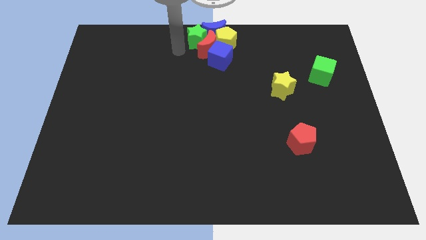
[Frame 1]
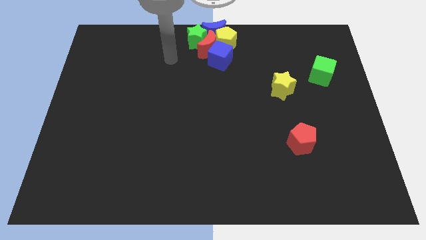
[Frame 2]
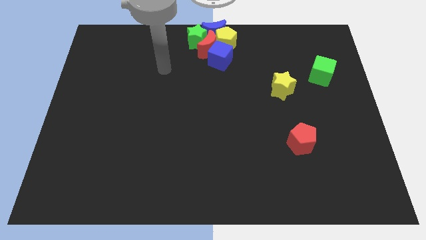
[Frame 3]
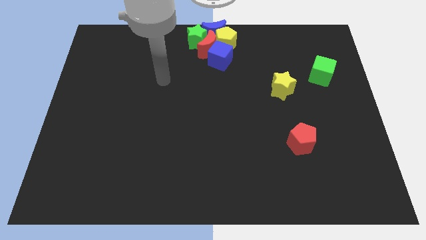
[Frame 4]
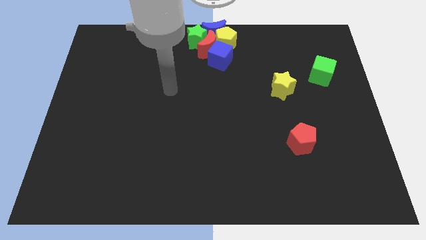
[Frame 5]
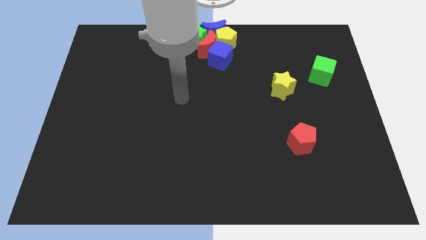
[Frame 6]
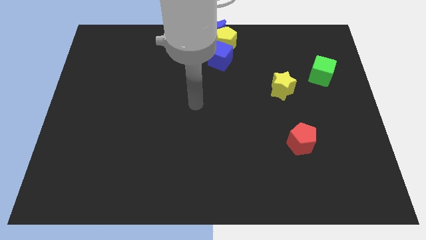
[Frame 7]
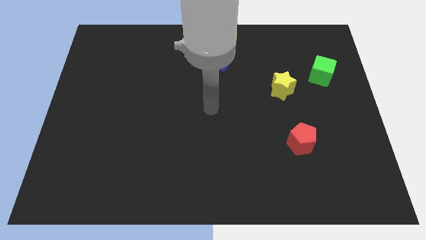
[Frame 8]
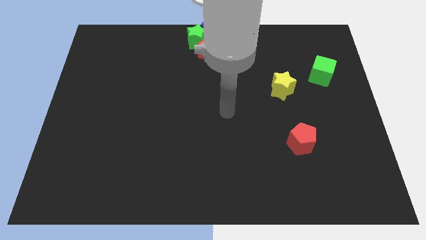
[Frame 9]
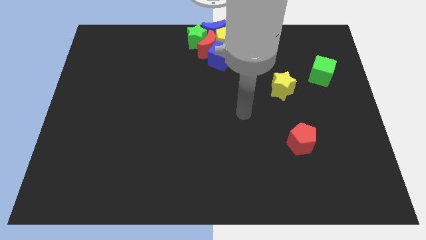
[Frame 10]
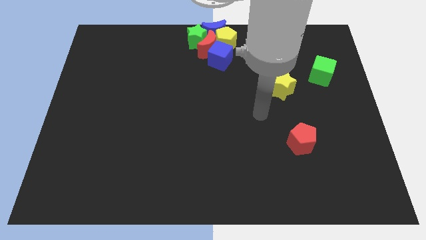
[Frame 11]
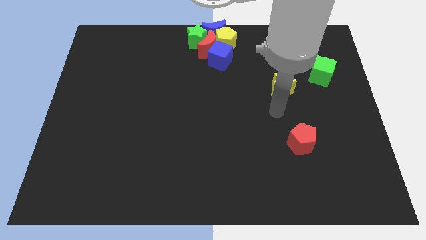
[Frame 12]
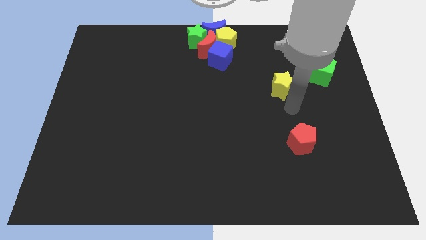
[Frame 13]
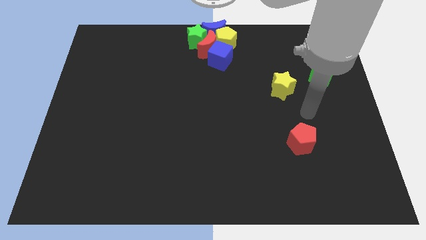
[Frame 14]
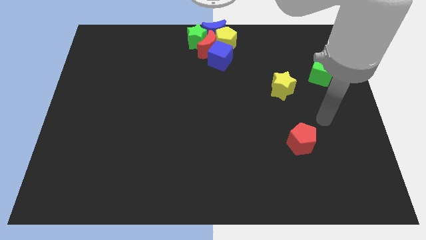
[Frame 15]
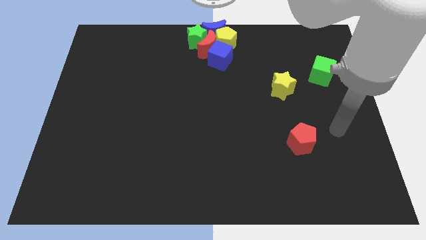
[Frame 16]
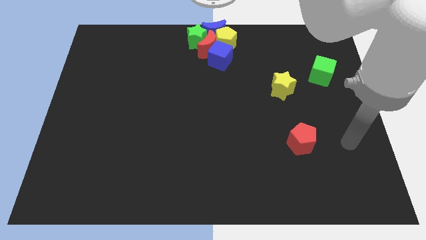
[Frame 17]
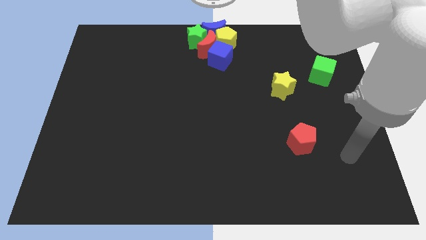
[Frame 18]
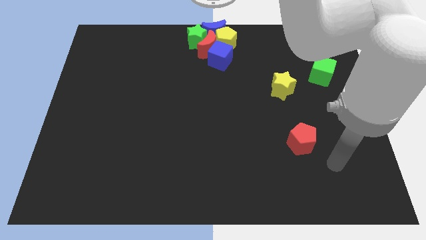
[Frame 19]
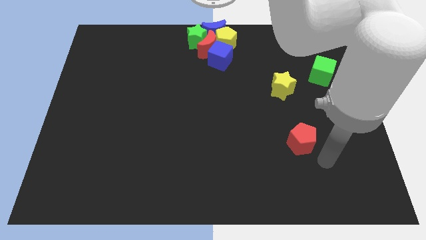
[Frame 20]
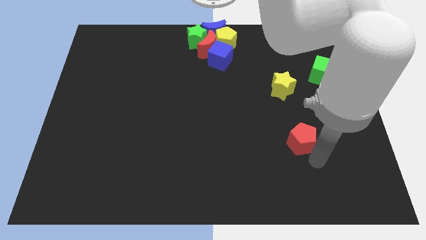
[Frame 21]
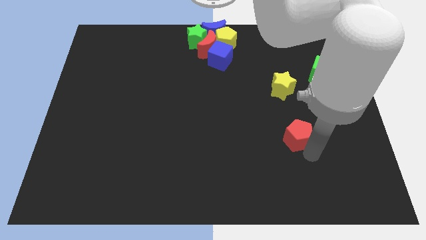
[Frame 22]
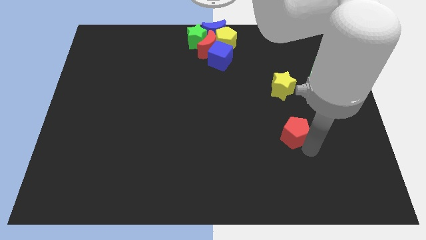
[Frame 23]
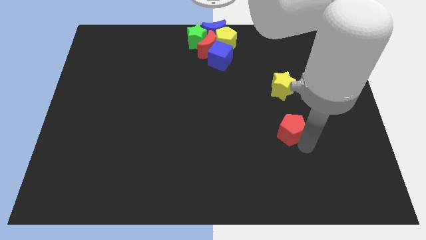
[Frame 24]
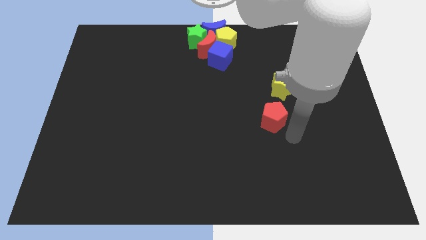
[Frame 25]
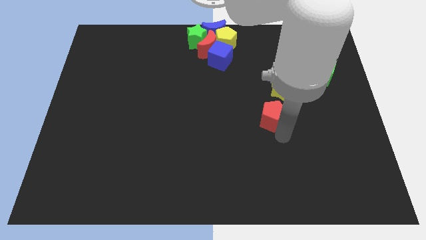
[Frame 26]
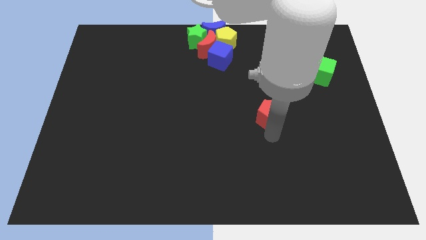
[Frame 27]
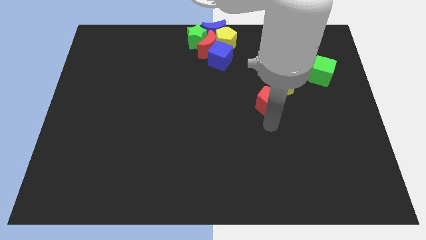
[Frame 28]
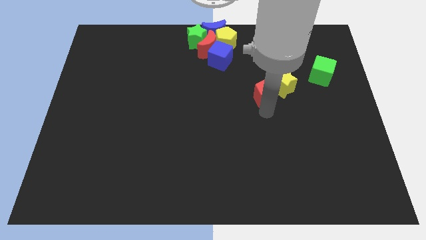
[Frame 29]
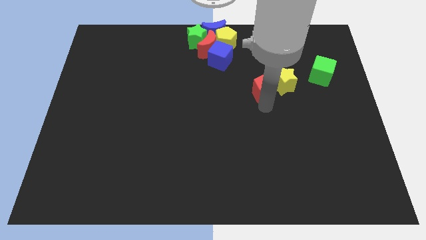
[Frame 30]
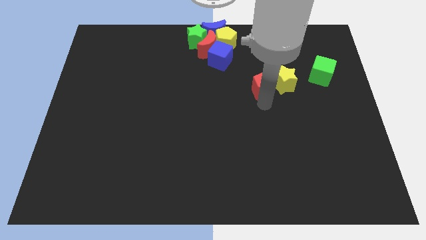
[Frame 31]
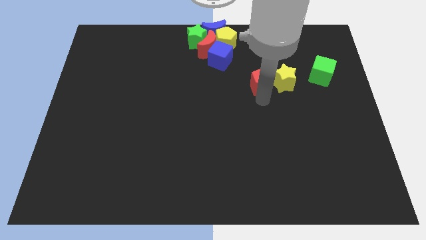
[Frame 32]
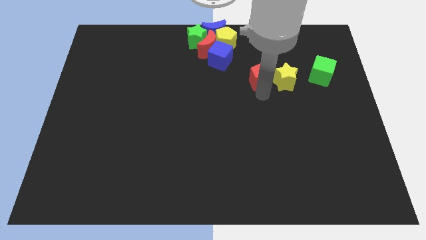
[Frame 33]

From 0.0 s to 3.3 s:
place the red pentagon to the left of the yellow star

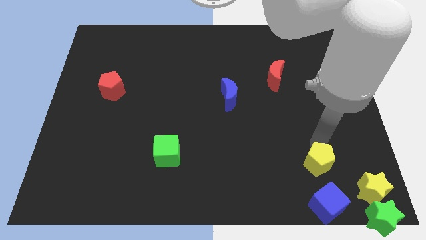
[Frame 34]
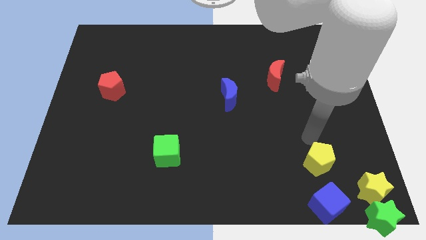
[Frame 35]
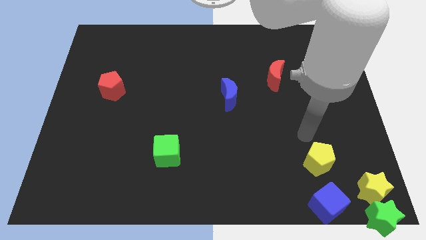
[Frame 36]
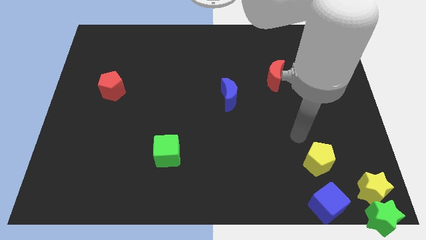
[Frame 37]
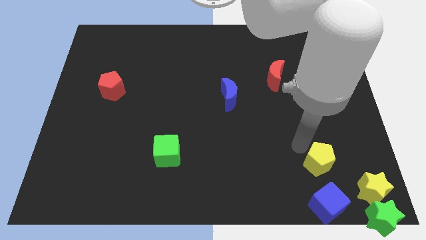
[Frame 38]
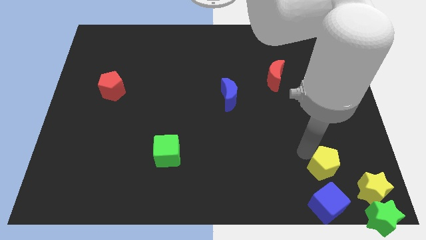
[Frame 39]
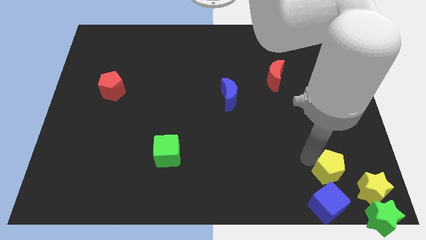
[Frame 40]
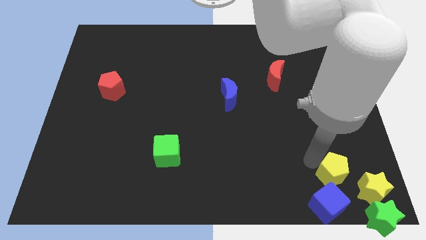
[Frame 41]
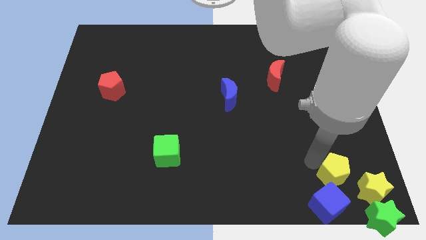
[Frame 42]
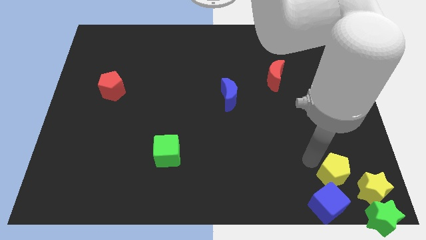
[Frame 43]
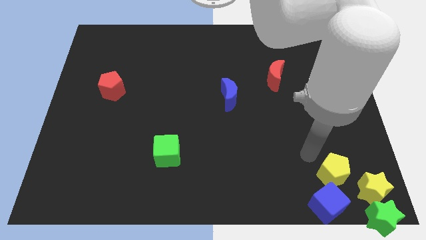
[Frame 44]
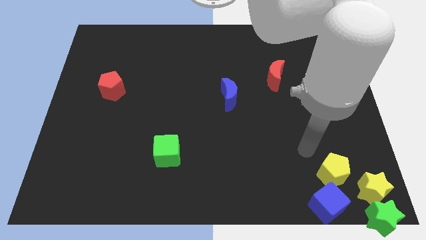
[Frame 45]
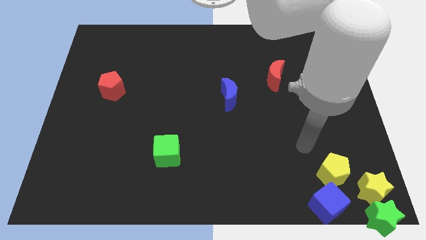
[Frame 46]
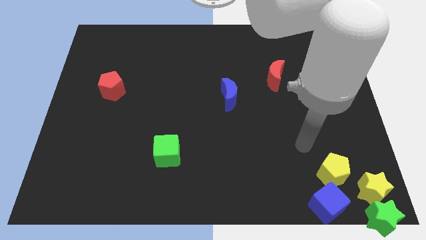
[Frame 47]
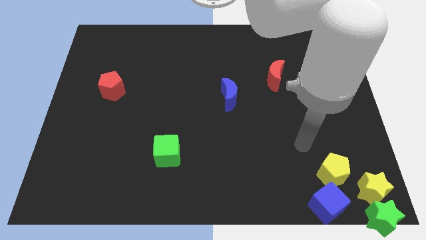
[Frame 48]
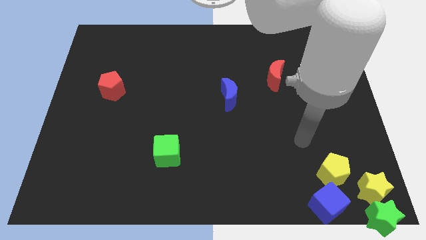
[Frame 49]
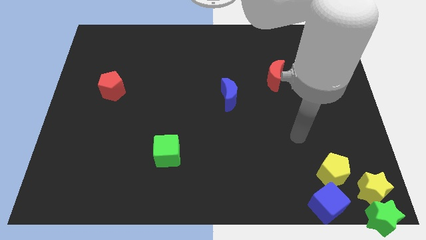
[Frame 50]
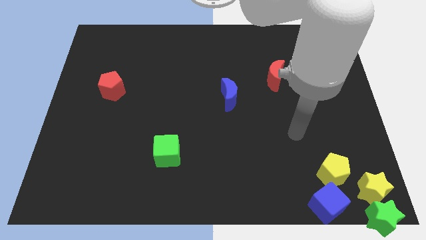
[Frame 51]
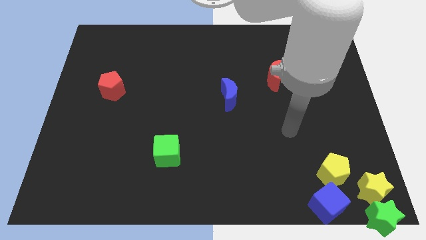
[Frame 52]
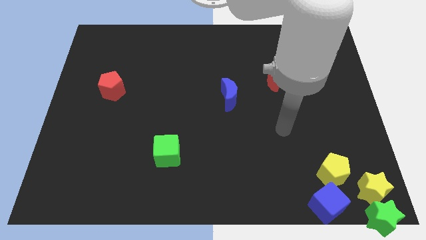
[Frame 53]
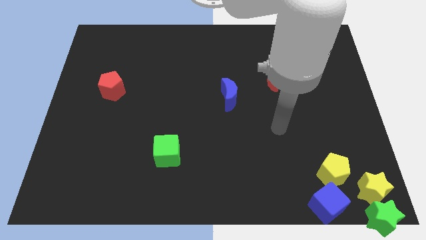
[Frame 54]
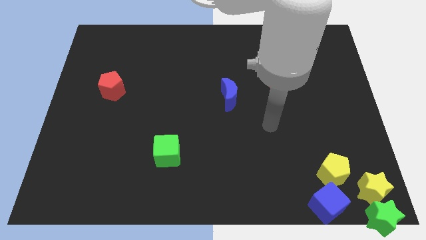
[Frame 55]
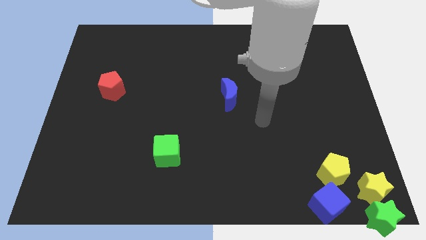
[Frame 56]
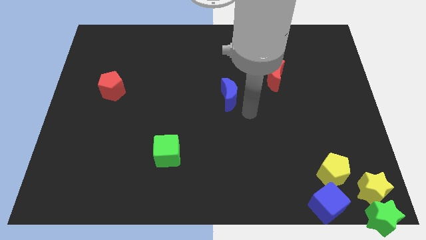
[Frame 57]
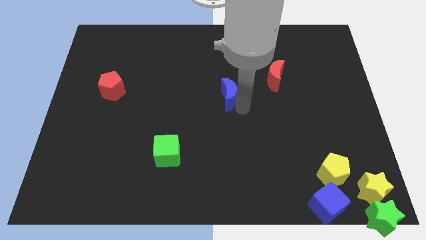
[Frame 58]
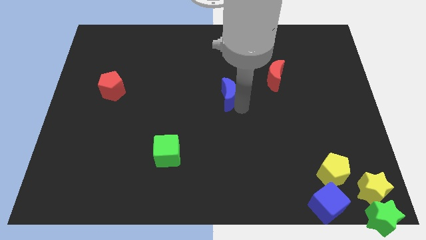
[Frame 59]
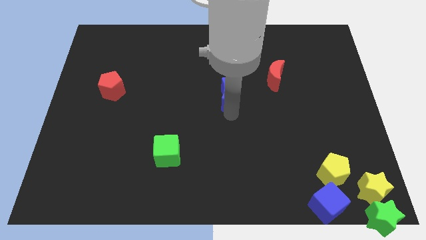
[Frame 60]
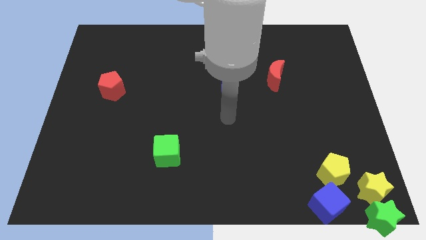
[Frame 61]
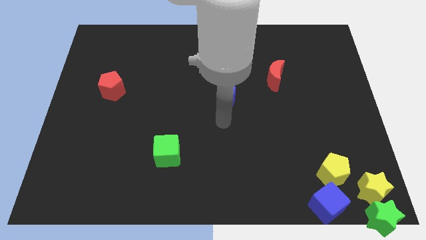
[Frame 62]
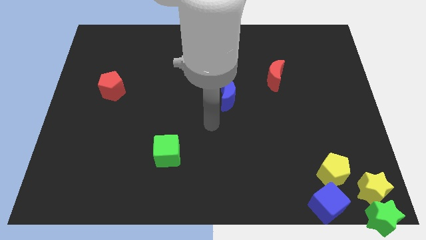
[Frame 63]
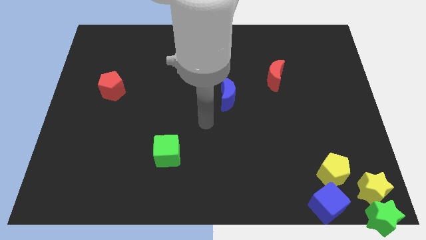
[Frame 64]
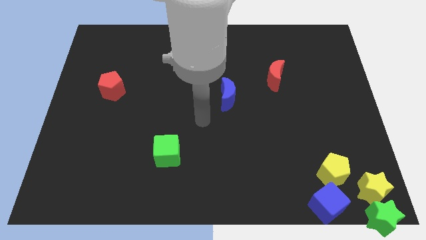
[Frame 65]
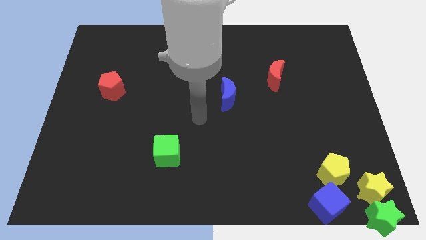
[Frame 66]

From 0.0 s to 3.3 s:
slightly move the yellow pentagon to the bottom right corner of the board

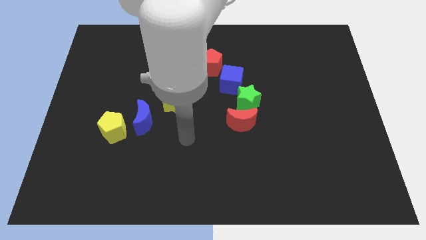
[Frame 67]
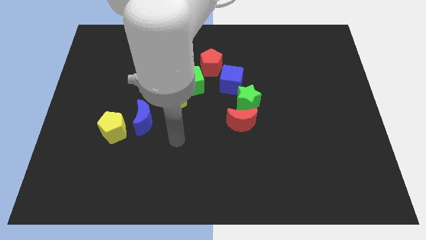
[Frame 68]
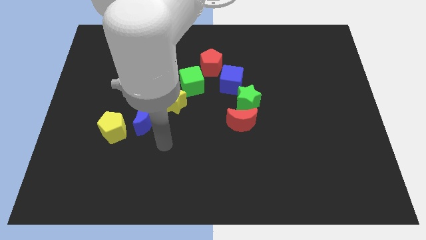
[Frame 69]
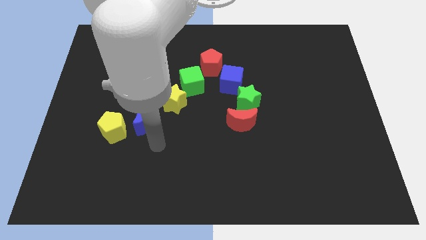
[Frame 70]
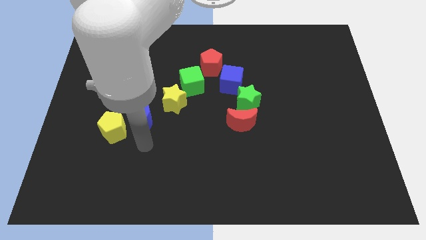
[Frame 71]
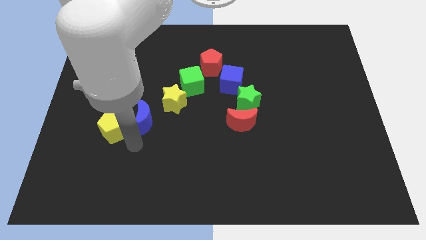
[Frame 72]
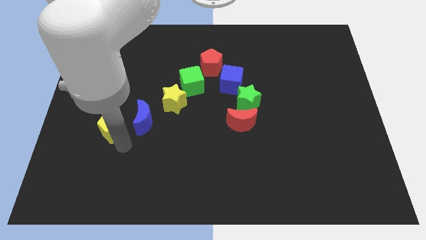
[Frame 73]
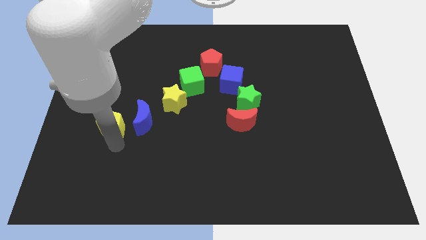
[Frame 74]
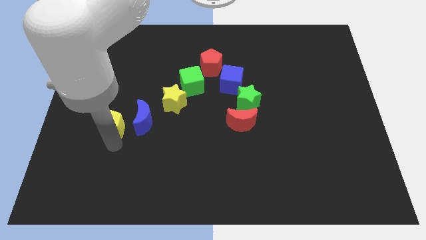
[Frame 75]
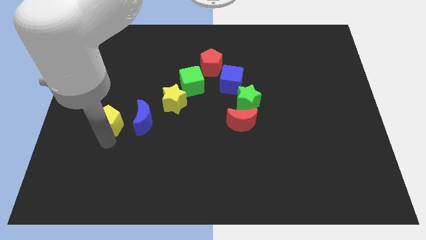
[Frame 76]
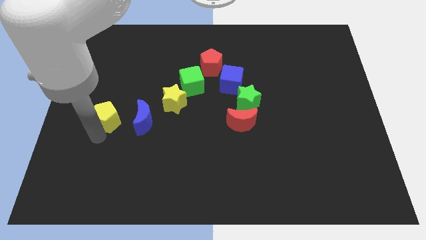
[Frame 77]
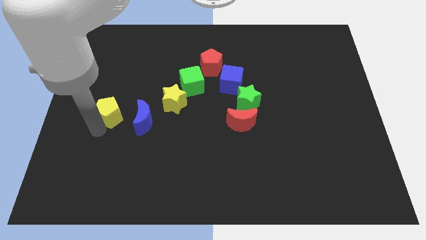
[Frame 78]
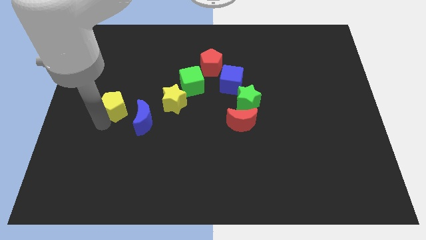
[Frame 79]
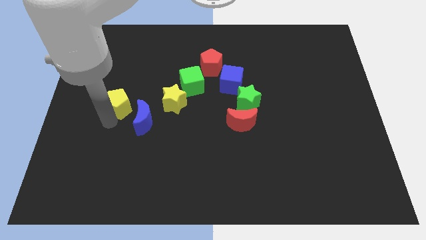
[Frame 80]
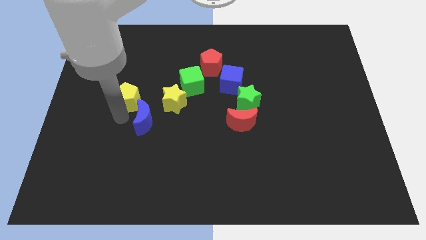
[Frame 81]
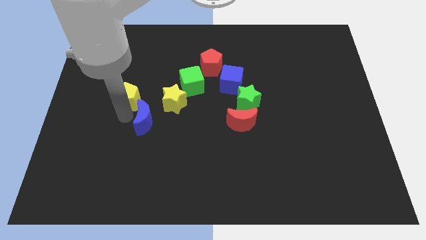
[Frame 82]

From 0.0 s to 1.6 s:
move the yellow pentagon slightly towards up

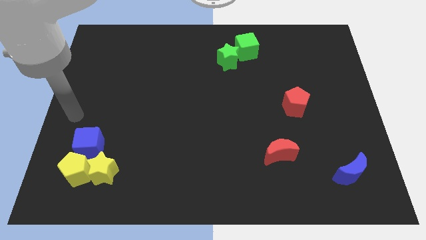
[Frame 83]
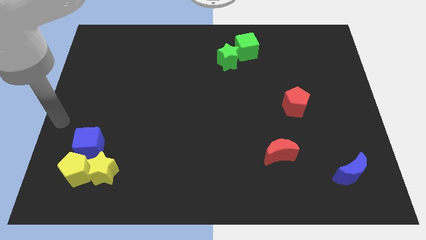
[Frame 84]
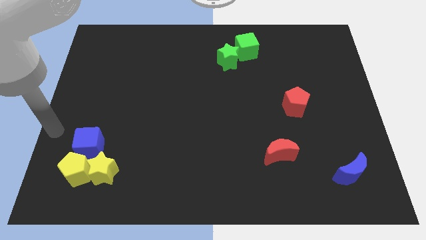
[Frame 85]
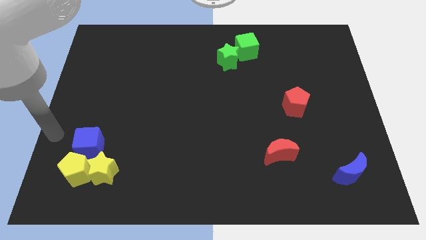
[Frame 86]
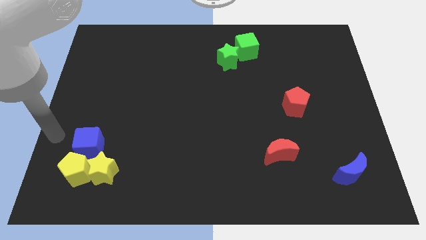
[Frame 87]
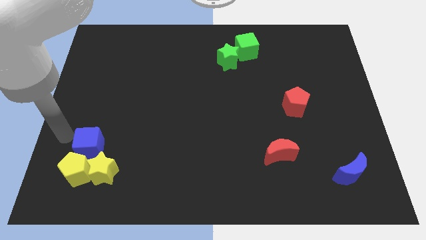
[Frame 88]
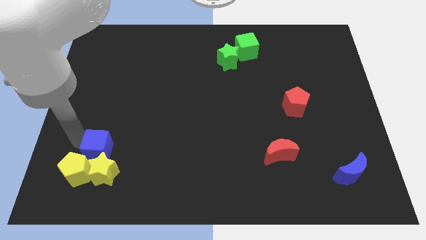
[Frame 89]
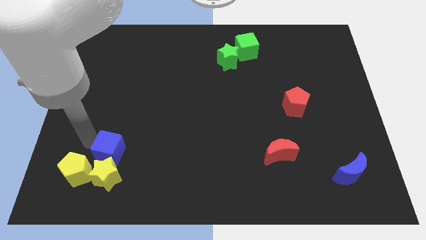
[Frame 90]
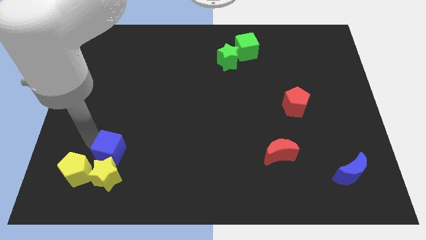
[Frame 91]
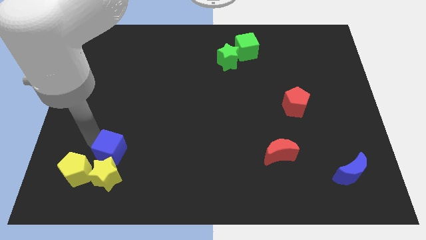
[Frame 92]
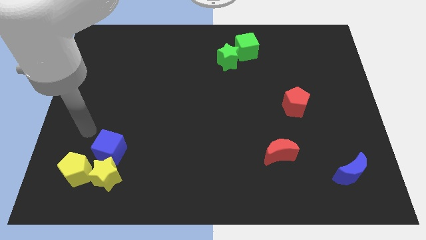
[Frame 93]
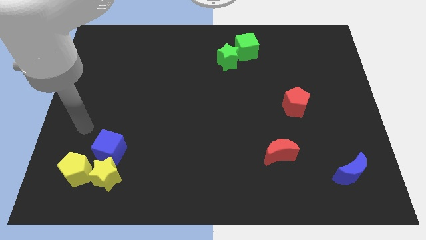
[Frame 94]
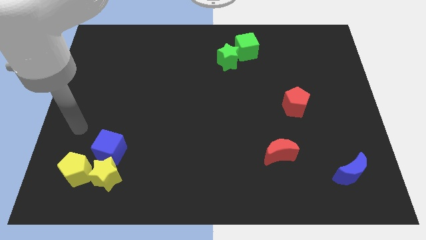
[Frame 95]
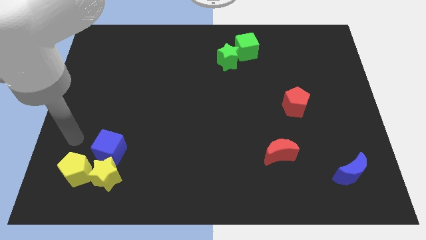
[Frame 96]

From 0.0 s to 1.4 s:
move the blue cube into the yellow star
